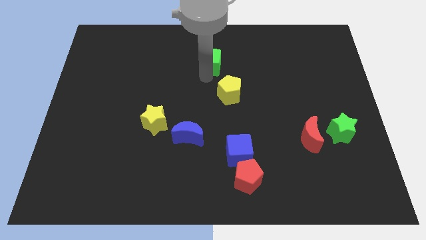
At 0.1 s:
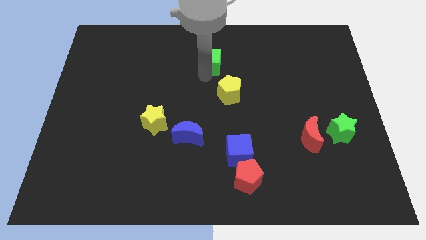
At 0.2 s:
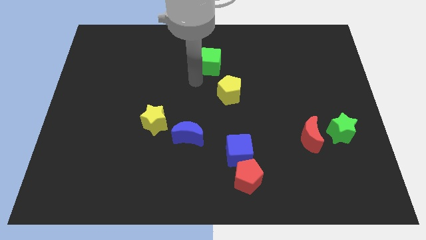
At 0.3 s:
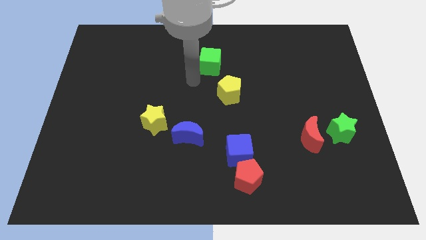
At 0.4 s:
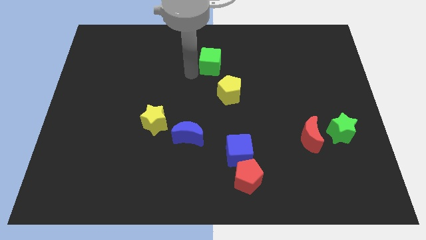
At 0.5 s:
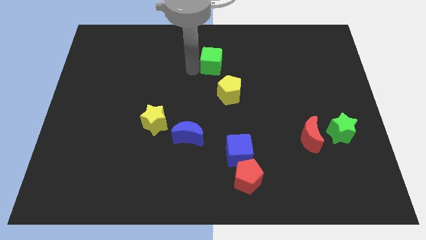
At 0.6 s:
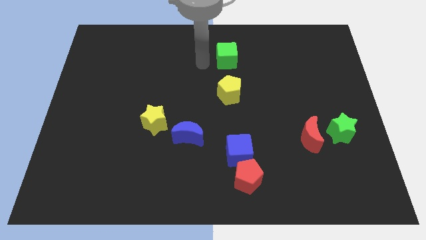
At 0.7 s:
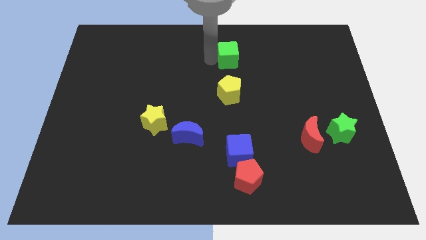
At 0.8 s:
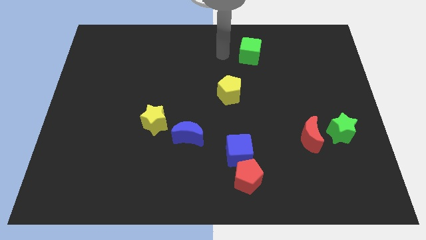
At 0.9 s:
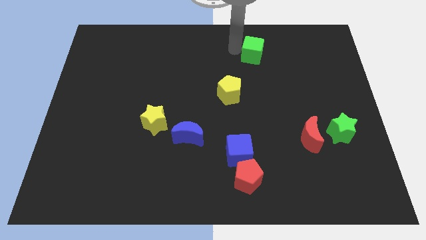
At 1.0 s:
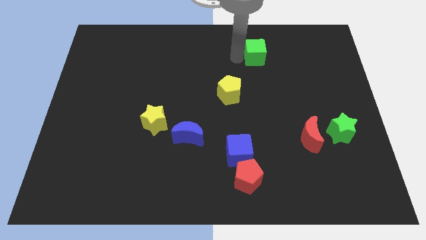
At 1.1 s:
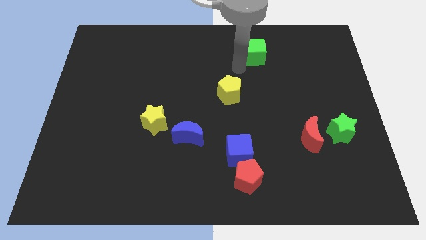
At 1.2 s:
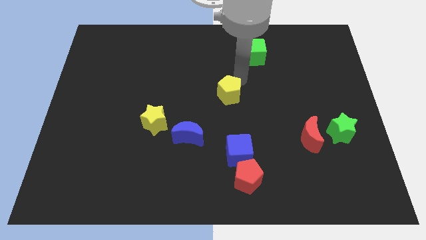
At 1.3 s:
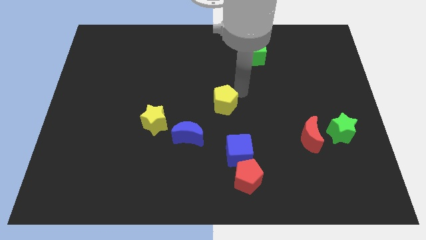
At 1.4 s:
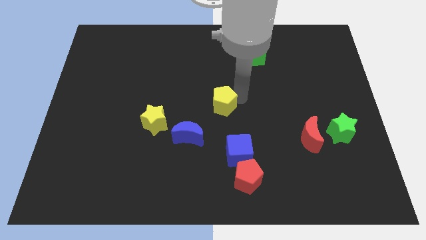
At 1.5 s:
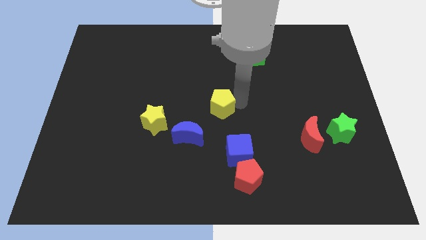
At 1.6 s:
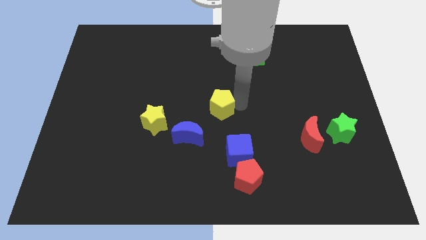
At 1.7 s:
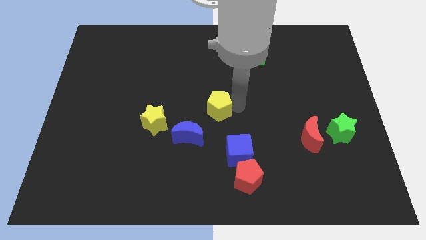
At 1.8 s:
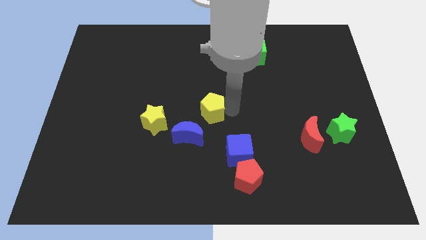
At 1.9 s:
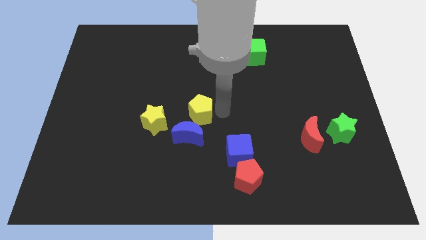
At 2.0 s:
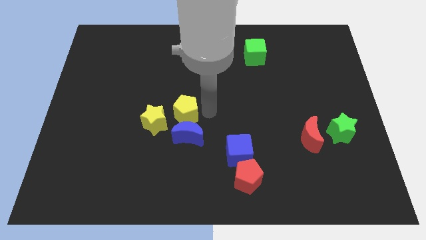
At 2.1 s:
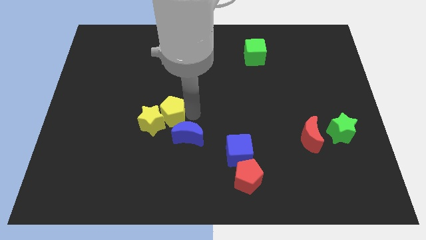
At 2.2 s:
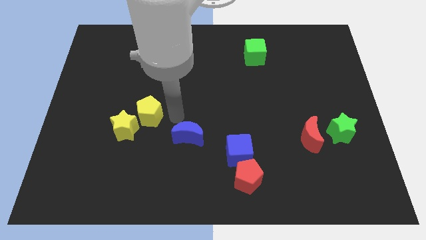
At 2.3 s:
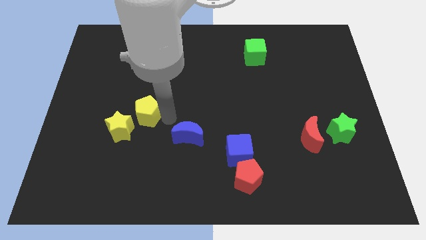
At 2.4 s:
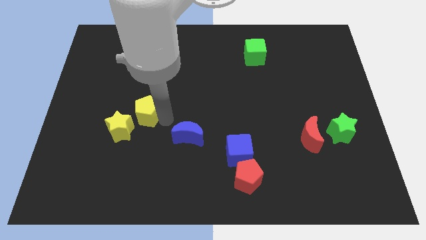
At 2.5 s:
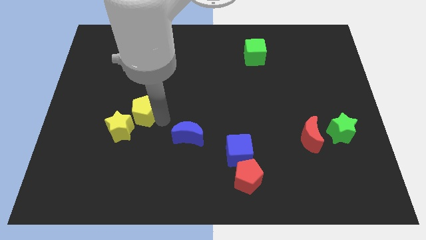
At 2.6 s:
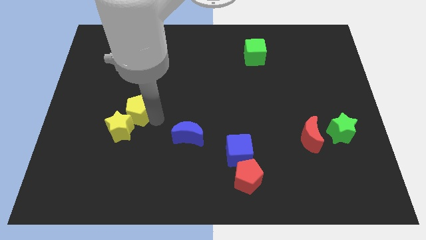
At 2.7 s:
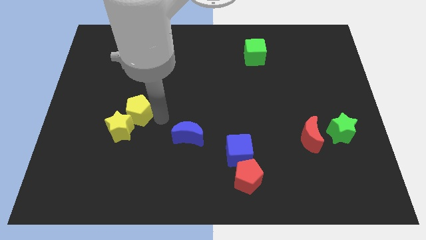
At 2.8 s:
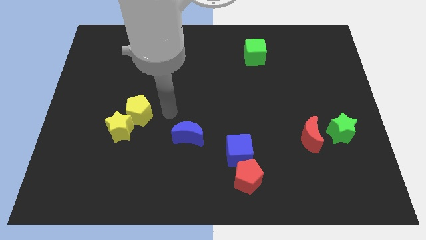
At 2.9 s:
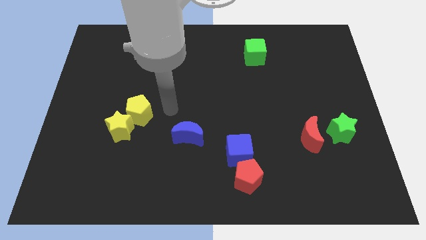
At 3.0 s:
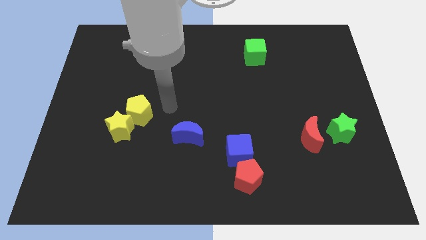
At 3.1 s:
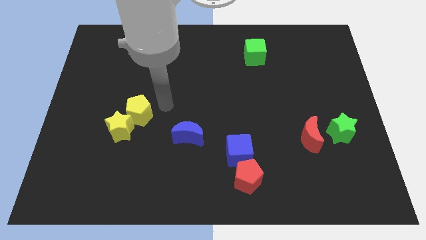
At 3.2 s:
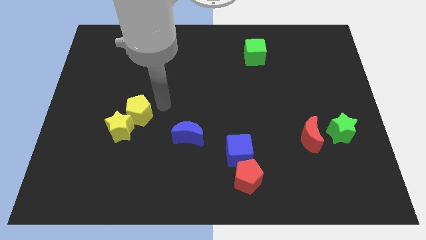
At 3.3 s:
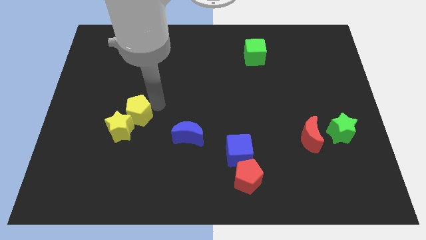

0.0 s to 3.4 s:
move the yellow pentagon and yellow star to the left

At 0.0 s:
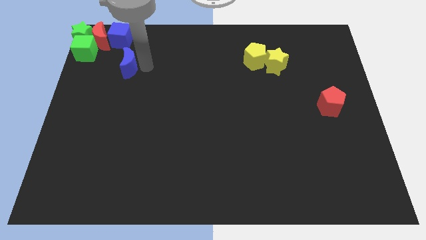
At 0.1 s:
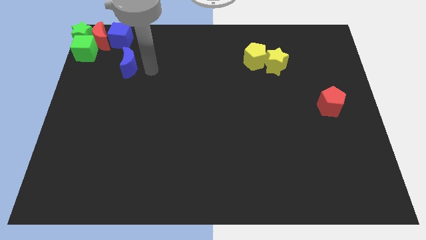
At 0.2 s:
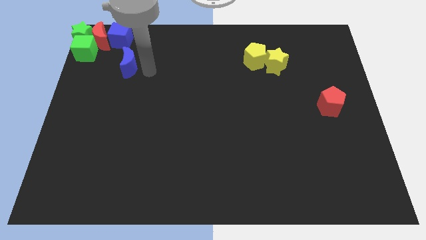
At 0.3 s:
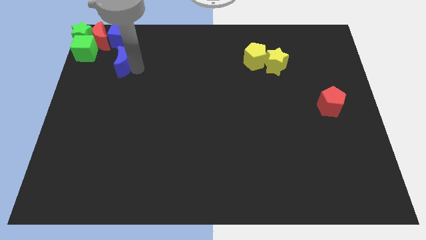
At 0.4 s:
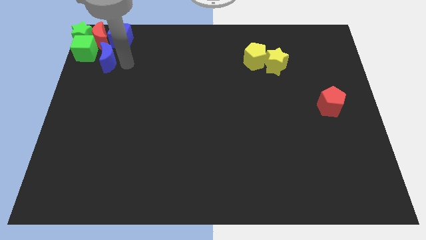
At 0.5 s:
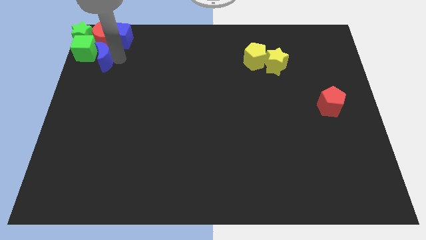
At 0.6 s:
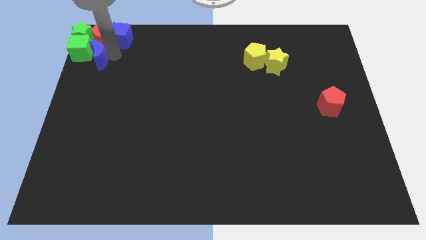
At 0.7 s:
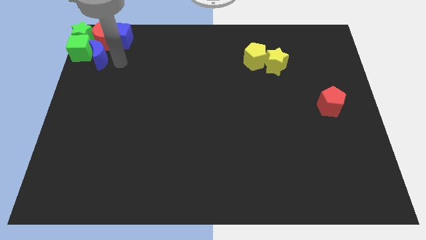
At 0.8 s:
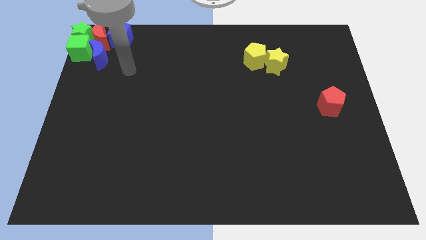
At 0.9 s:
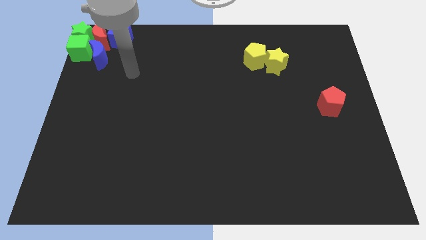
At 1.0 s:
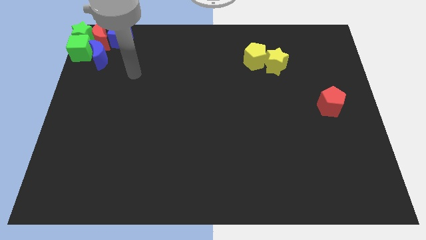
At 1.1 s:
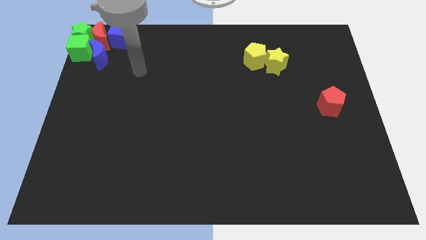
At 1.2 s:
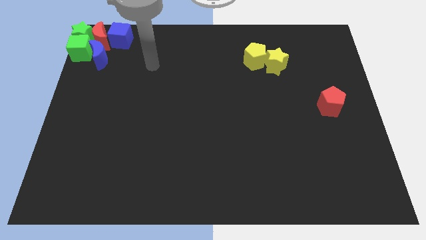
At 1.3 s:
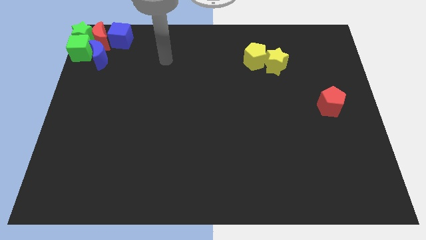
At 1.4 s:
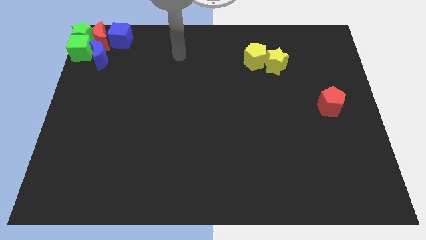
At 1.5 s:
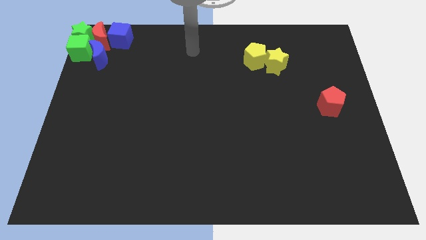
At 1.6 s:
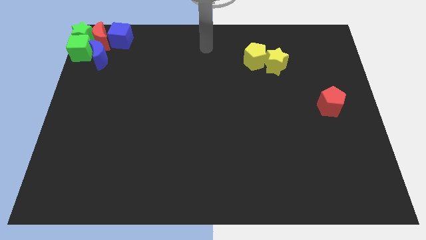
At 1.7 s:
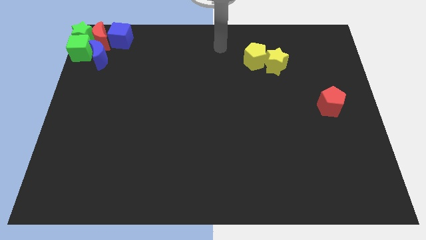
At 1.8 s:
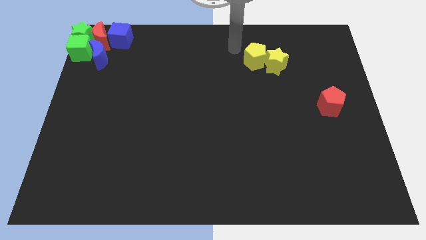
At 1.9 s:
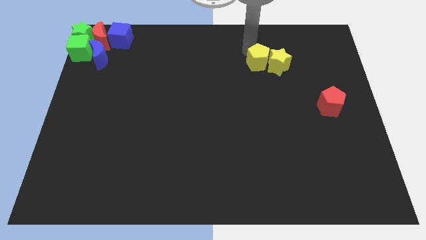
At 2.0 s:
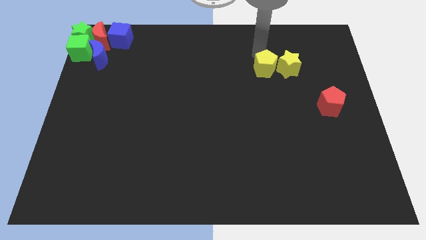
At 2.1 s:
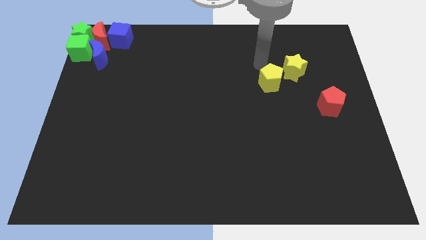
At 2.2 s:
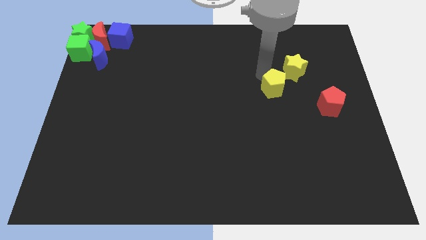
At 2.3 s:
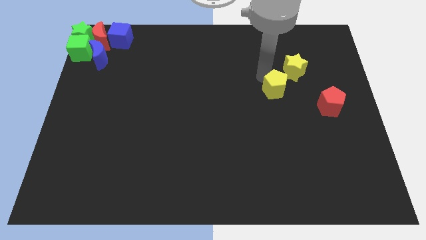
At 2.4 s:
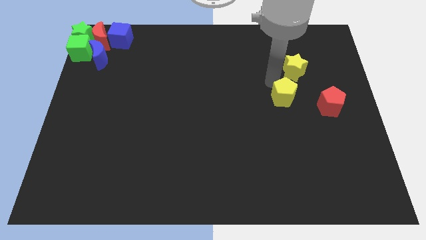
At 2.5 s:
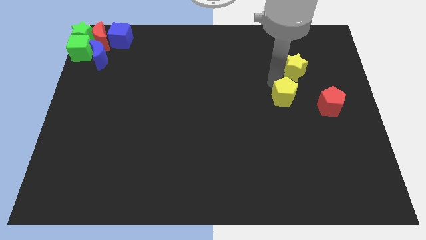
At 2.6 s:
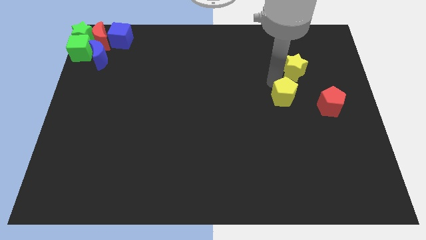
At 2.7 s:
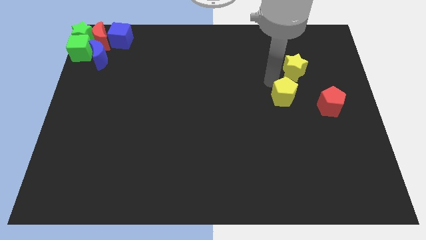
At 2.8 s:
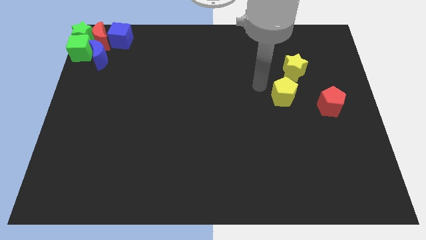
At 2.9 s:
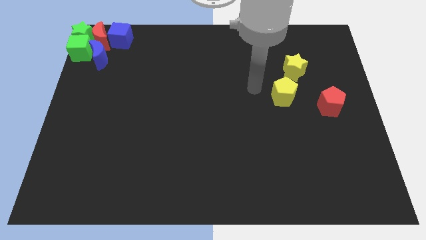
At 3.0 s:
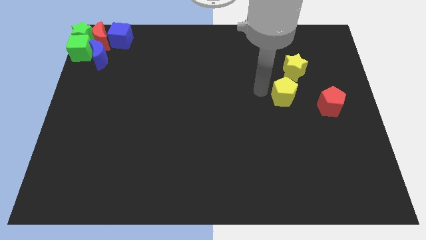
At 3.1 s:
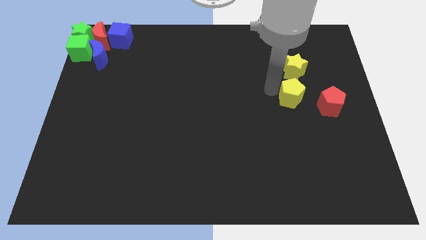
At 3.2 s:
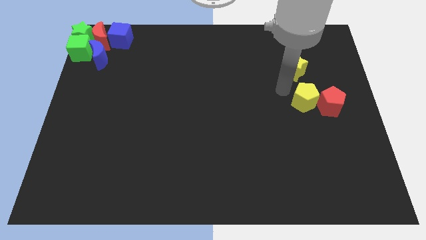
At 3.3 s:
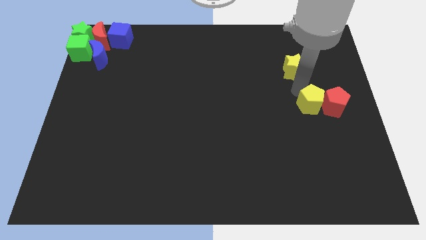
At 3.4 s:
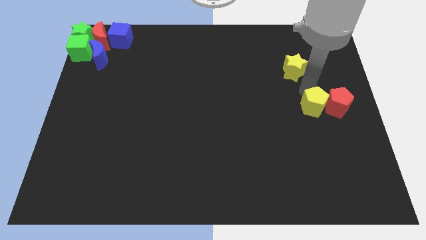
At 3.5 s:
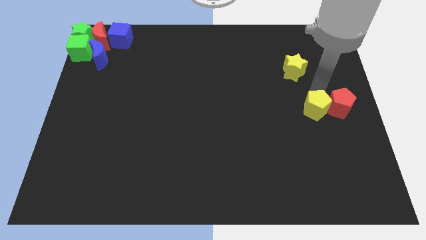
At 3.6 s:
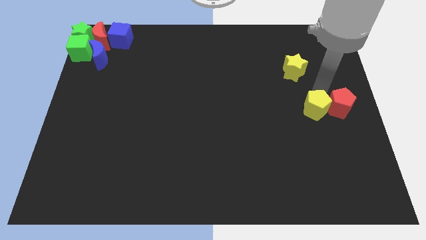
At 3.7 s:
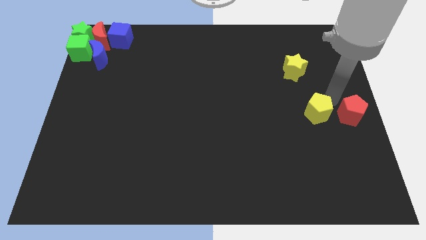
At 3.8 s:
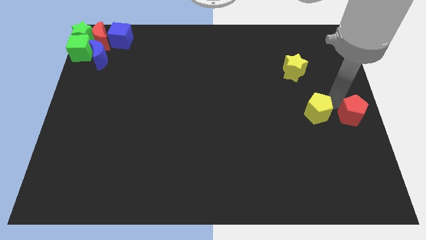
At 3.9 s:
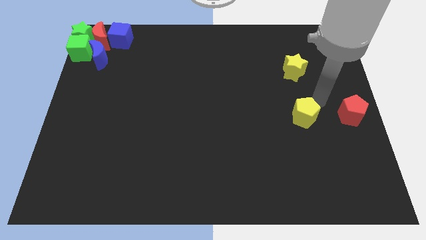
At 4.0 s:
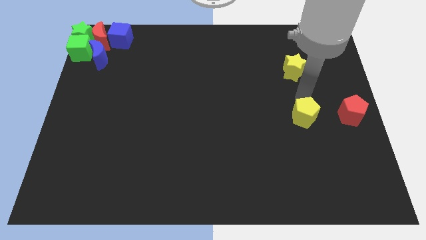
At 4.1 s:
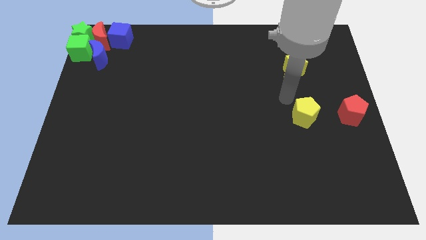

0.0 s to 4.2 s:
move the yellow pentagon towards the red pentagon

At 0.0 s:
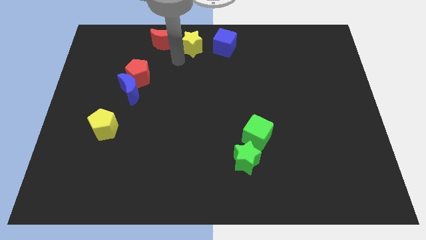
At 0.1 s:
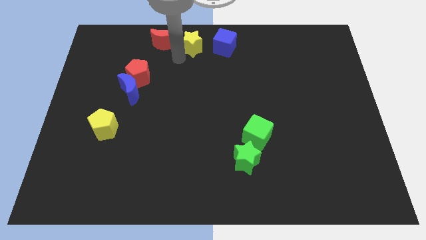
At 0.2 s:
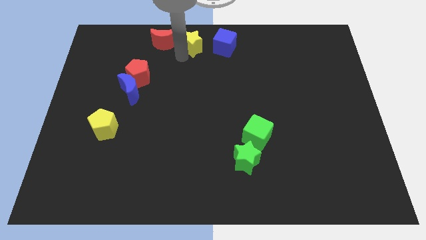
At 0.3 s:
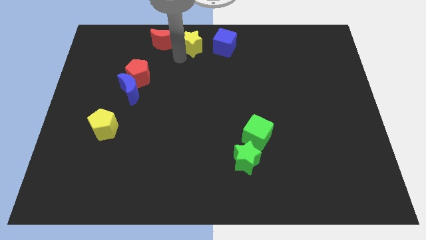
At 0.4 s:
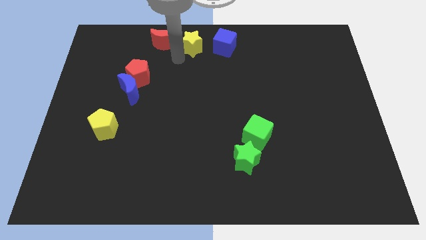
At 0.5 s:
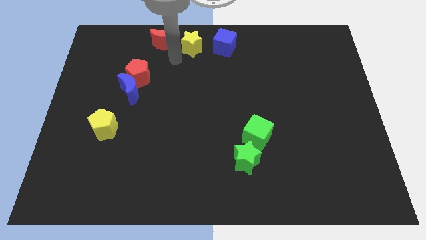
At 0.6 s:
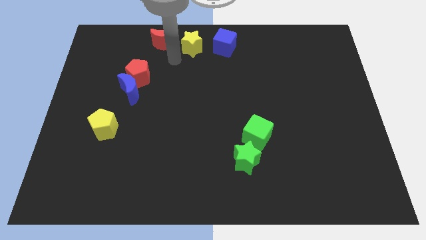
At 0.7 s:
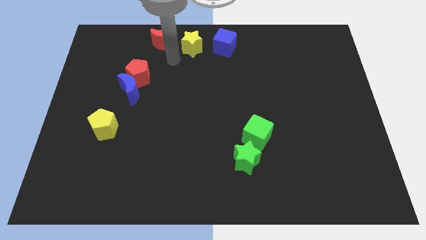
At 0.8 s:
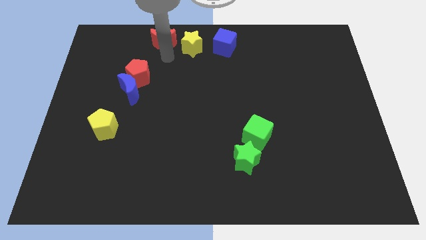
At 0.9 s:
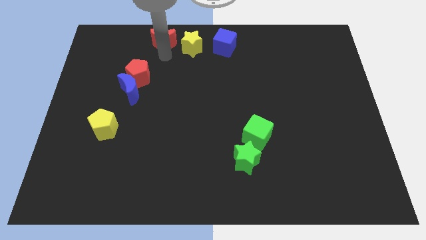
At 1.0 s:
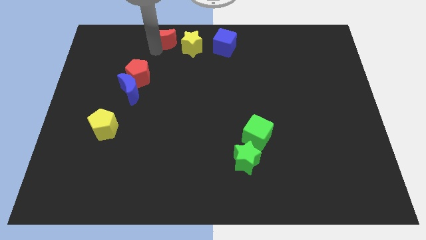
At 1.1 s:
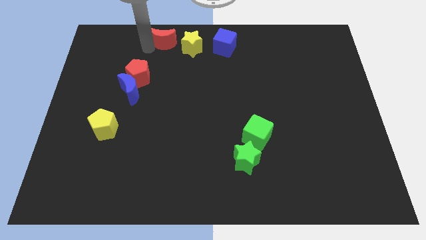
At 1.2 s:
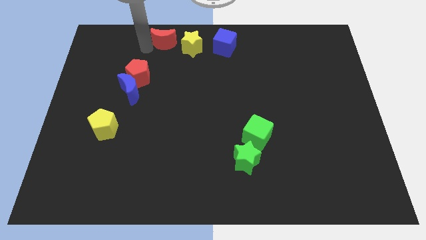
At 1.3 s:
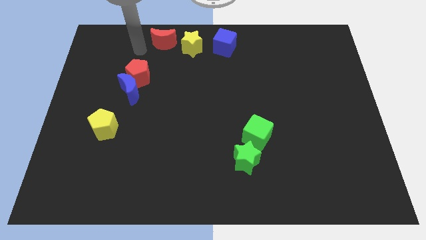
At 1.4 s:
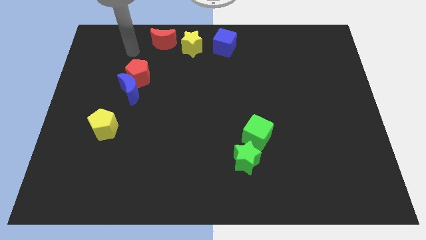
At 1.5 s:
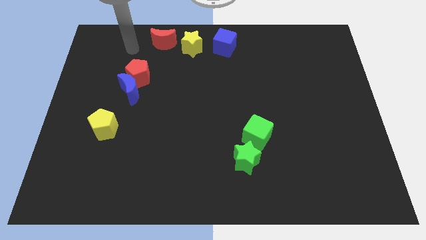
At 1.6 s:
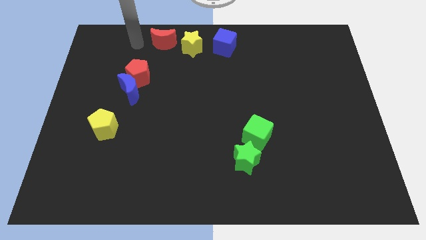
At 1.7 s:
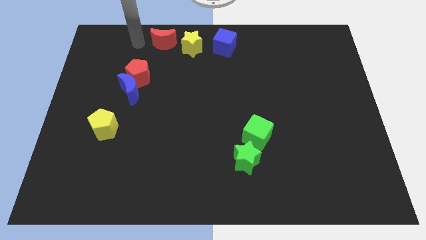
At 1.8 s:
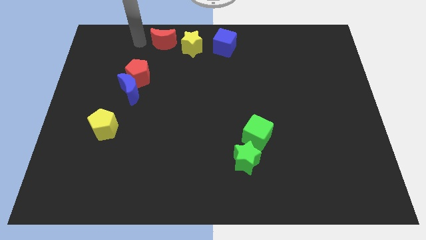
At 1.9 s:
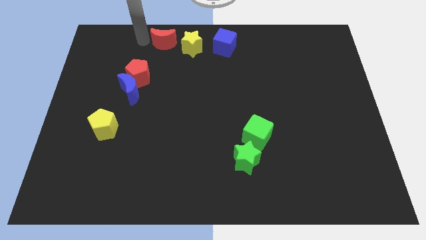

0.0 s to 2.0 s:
move your arm to the left of the red crescent
